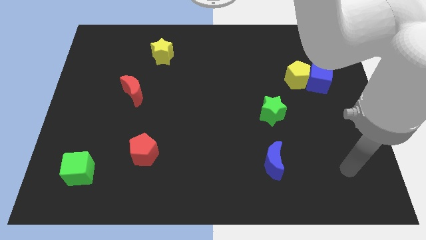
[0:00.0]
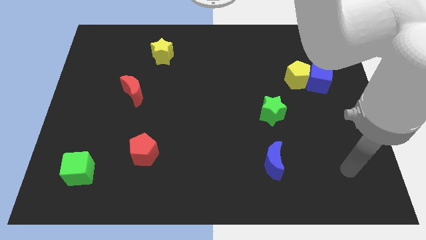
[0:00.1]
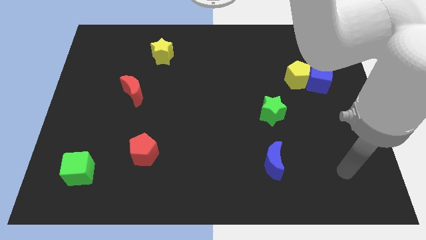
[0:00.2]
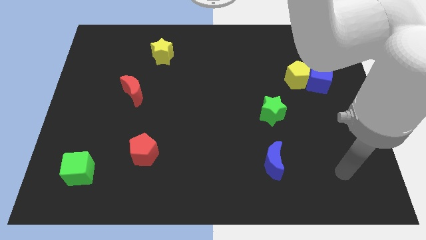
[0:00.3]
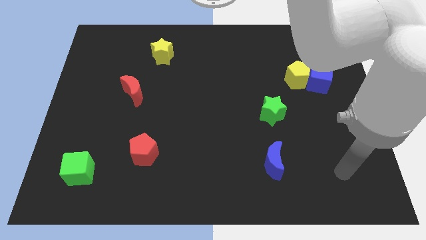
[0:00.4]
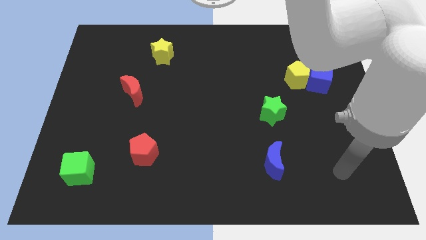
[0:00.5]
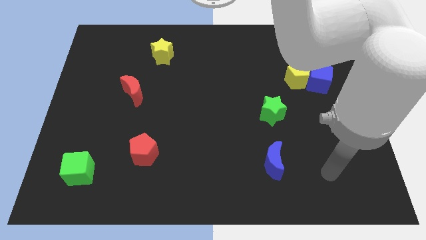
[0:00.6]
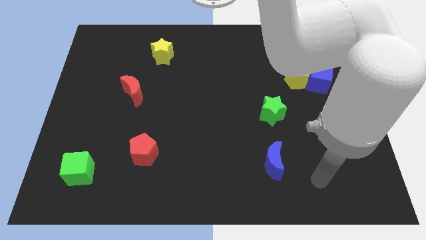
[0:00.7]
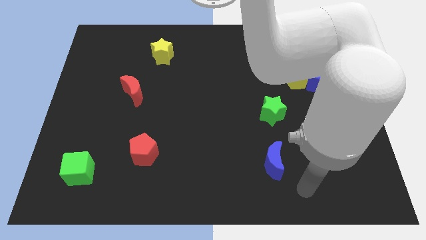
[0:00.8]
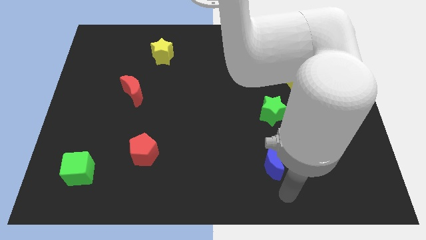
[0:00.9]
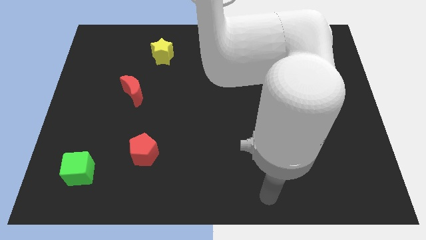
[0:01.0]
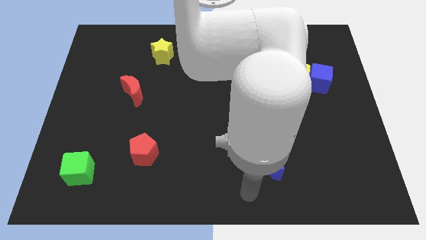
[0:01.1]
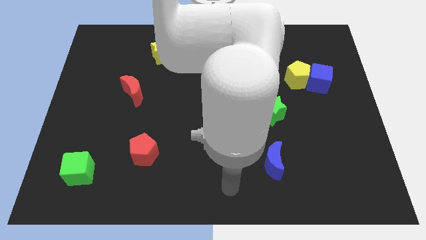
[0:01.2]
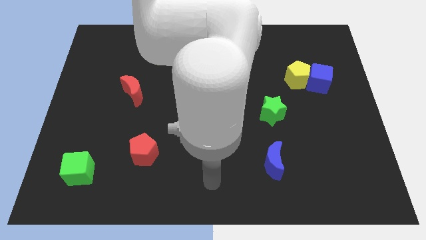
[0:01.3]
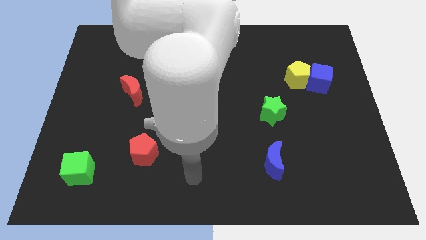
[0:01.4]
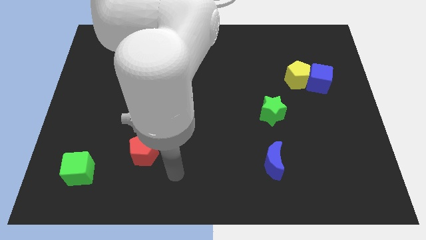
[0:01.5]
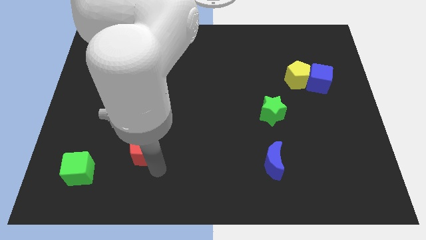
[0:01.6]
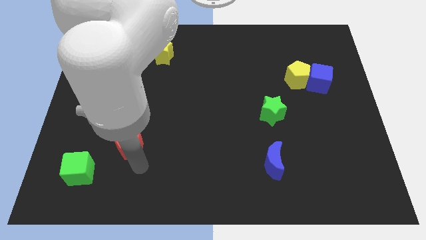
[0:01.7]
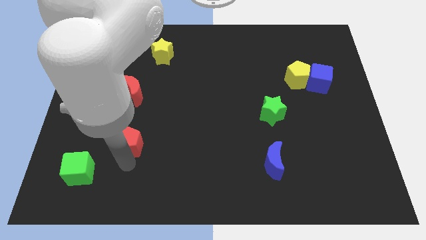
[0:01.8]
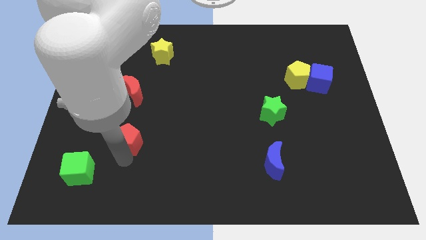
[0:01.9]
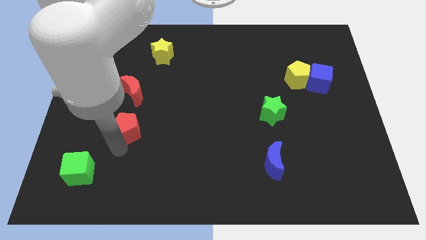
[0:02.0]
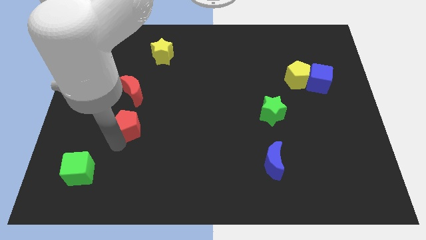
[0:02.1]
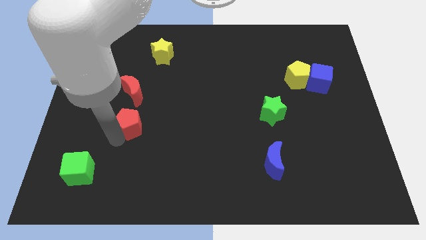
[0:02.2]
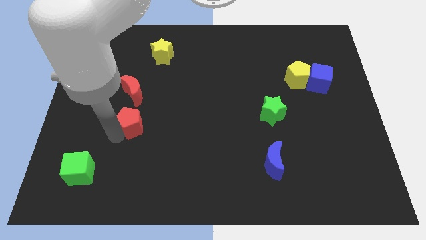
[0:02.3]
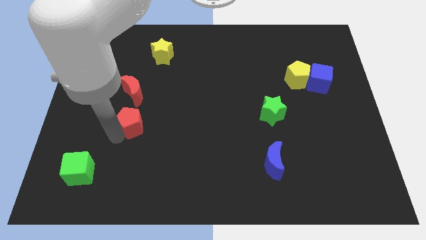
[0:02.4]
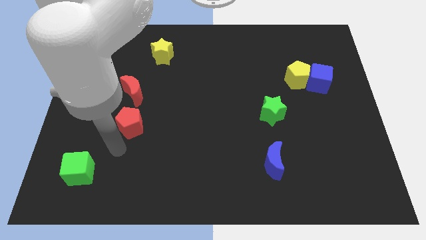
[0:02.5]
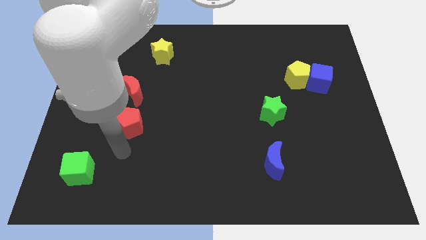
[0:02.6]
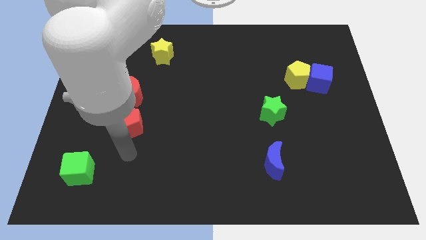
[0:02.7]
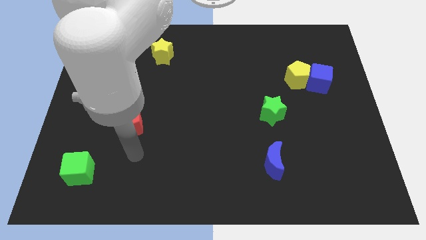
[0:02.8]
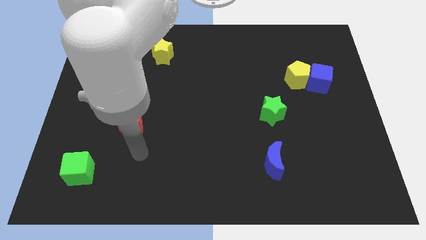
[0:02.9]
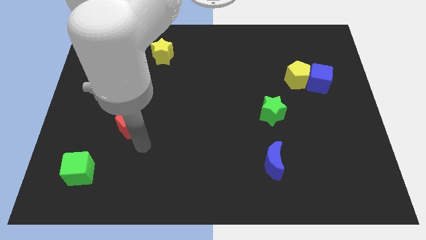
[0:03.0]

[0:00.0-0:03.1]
push red pentagon towards red moon

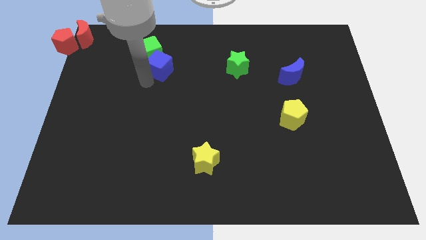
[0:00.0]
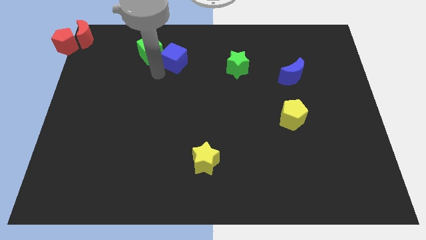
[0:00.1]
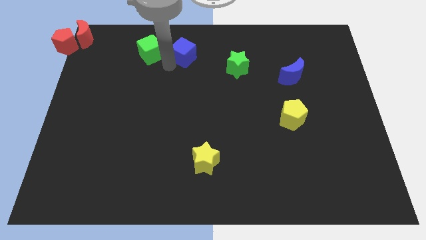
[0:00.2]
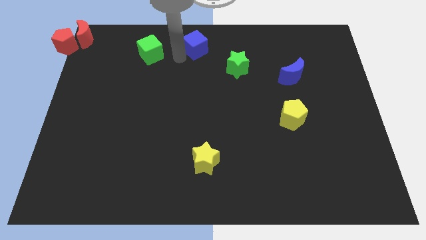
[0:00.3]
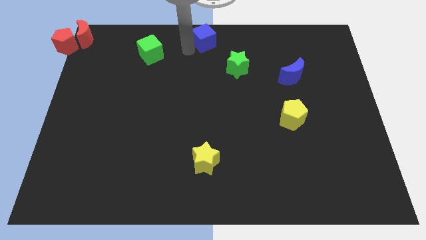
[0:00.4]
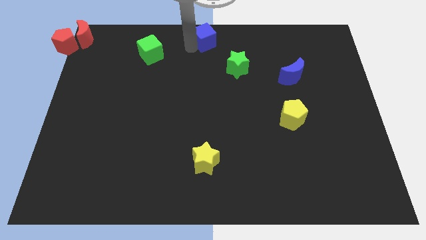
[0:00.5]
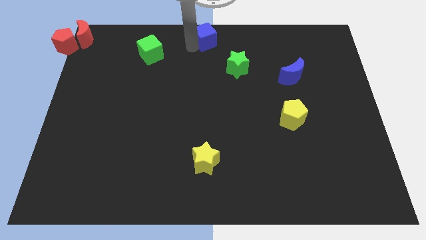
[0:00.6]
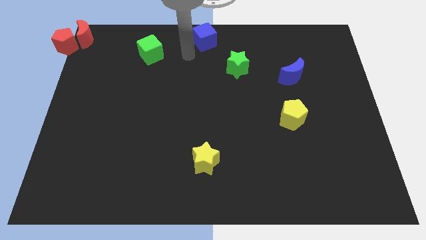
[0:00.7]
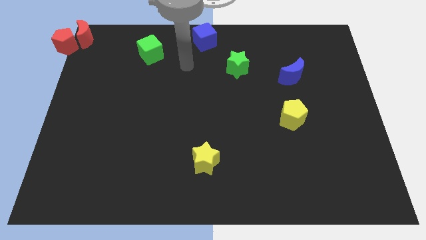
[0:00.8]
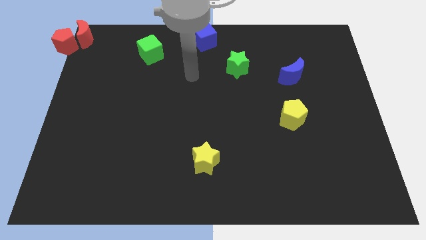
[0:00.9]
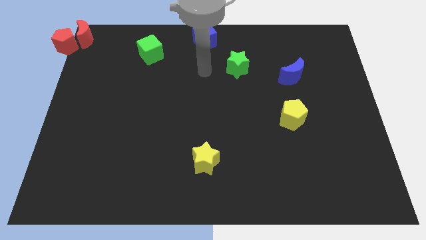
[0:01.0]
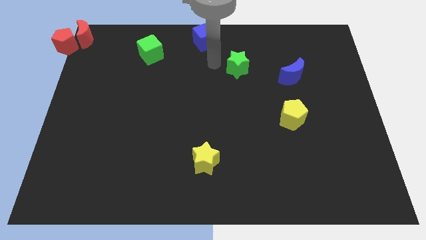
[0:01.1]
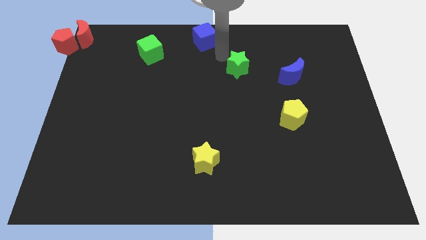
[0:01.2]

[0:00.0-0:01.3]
move blue cube to top center

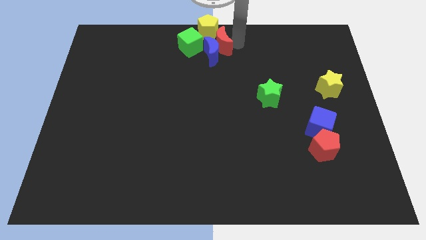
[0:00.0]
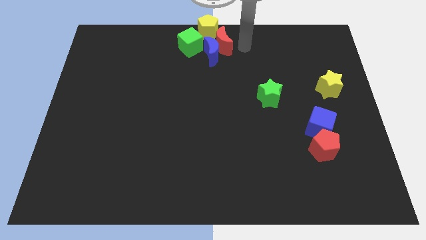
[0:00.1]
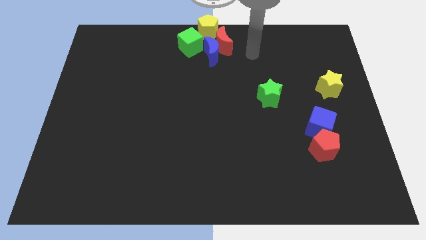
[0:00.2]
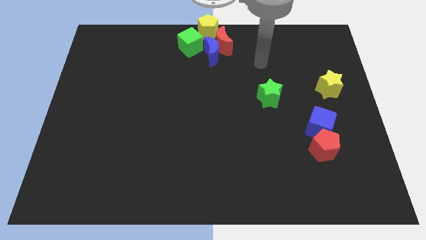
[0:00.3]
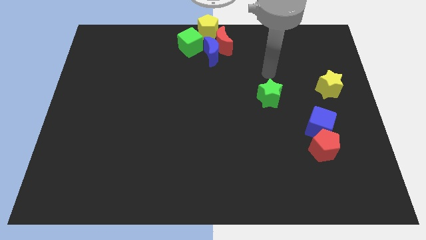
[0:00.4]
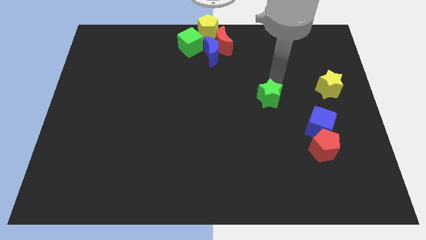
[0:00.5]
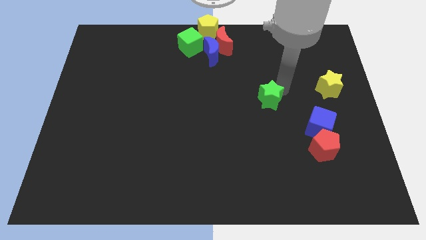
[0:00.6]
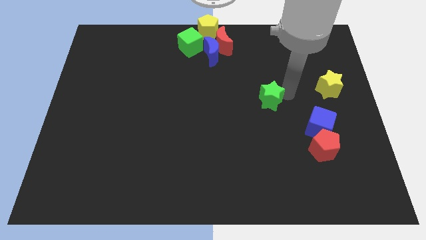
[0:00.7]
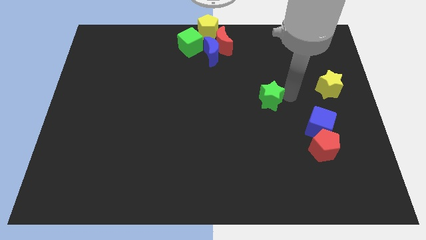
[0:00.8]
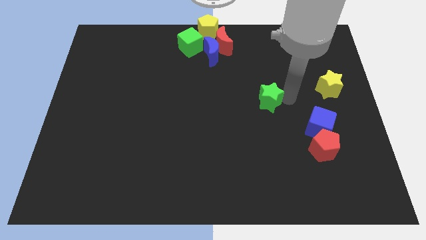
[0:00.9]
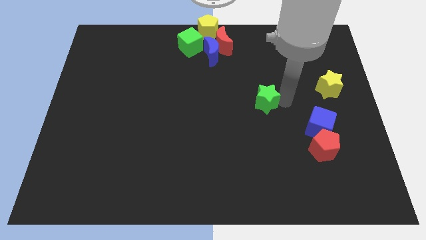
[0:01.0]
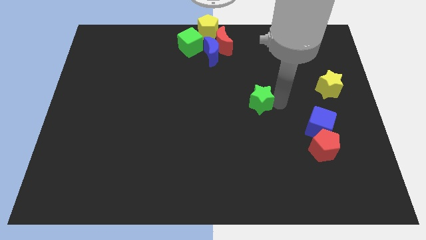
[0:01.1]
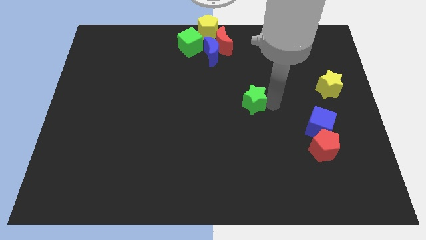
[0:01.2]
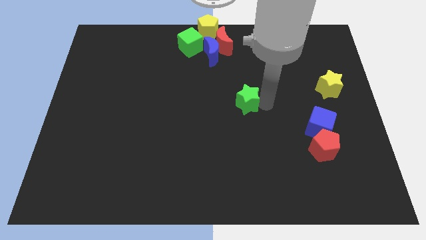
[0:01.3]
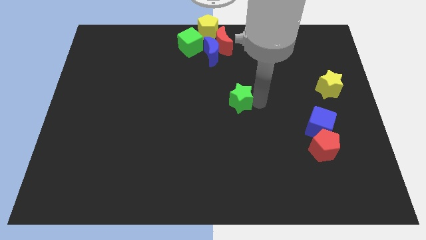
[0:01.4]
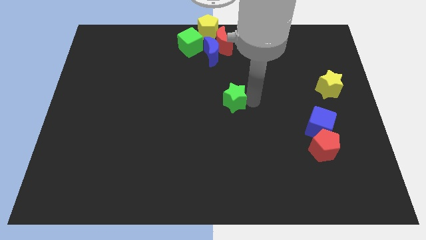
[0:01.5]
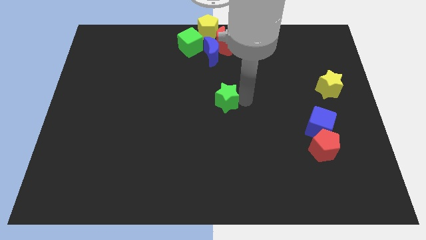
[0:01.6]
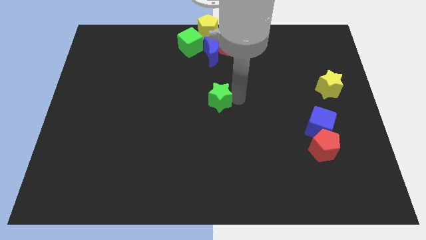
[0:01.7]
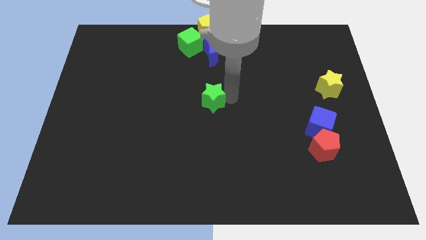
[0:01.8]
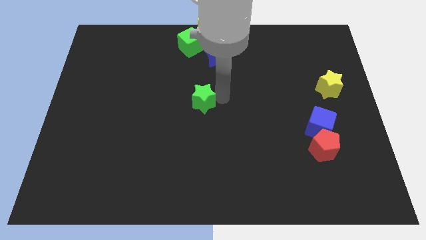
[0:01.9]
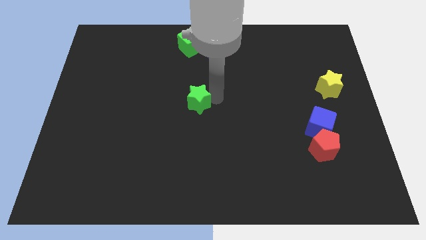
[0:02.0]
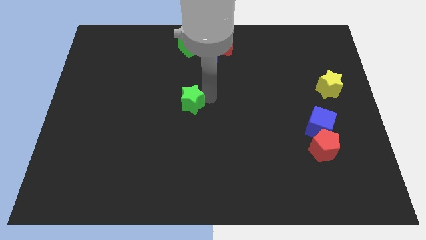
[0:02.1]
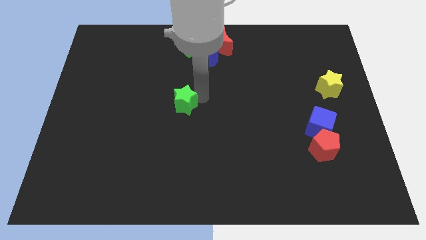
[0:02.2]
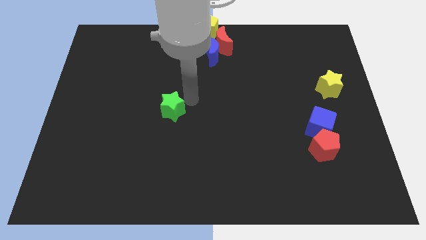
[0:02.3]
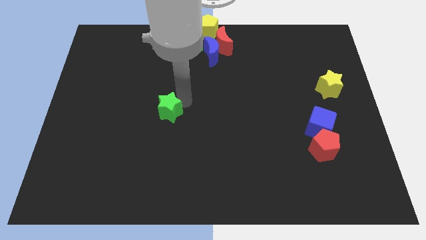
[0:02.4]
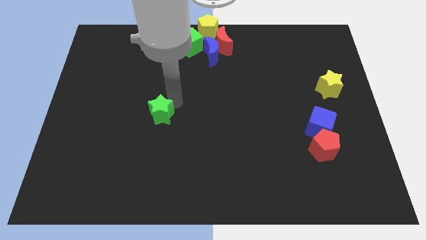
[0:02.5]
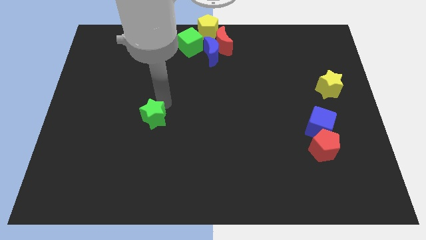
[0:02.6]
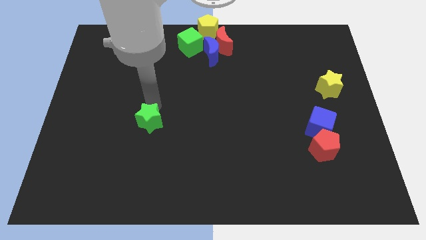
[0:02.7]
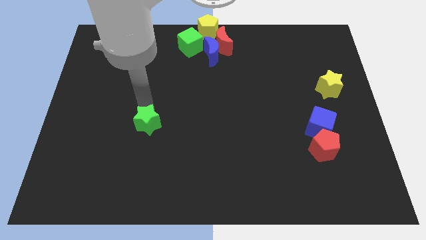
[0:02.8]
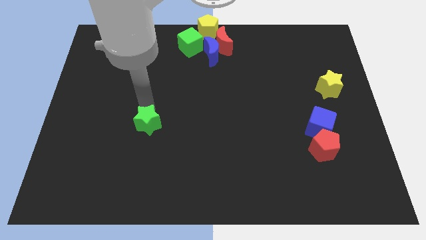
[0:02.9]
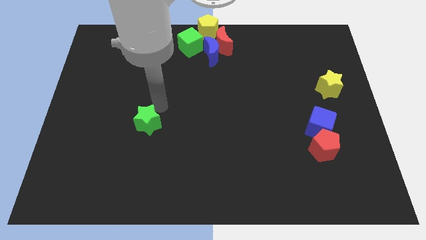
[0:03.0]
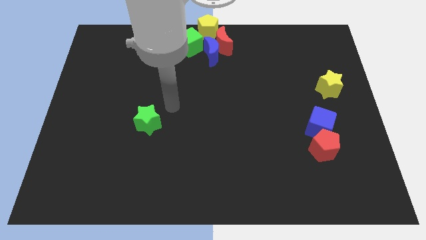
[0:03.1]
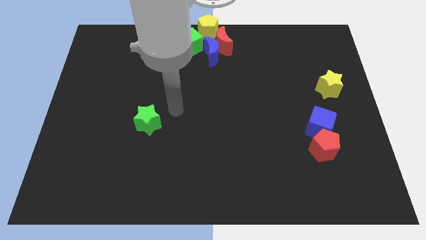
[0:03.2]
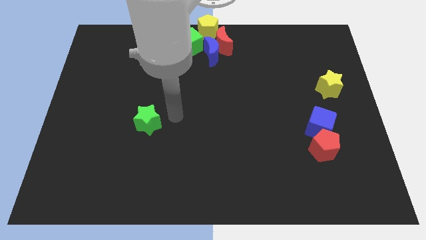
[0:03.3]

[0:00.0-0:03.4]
push the green star towards the bottom side of the board

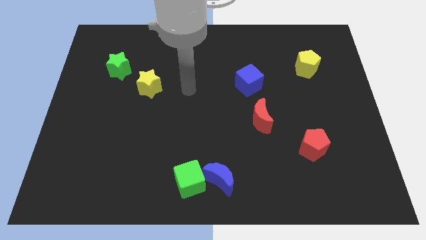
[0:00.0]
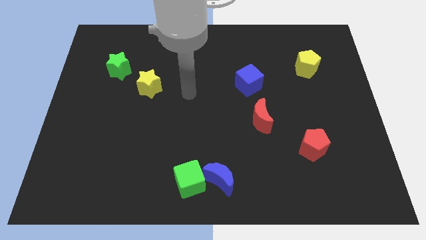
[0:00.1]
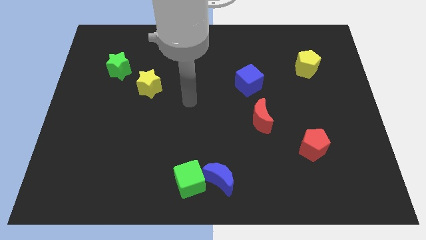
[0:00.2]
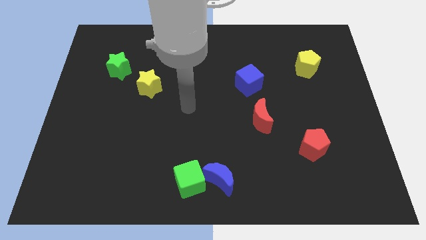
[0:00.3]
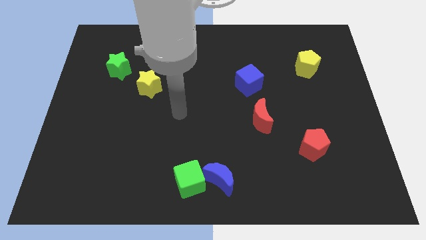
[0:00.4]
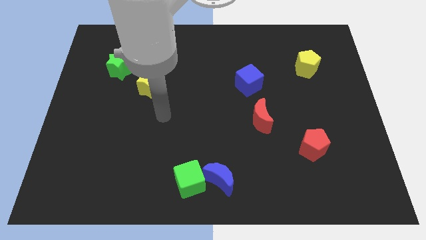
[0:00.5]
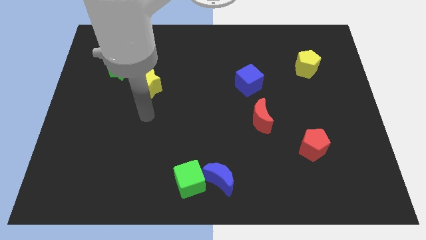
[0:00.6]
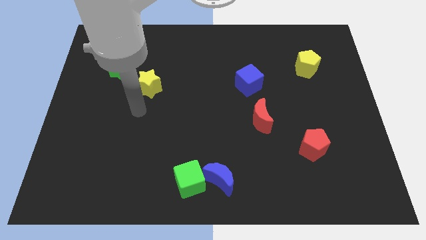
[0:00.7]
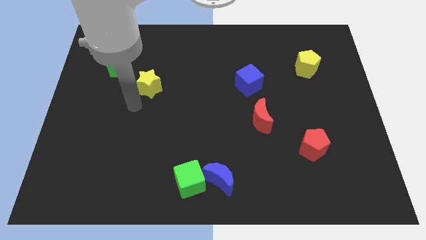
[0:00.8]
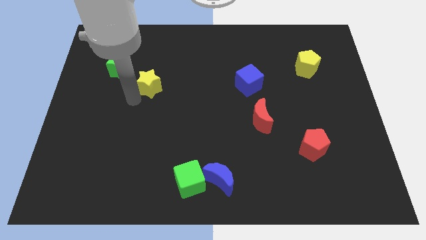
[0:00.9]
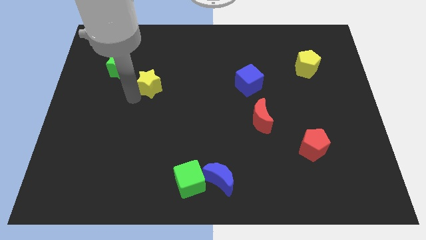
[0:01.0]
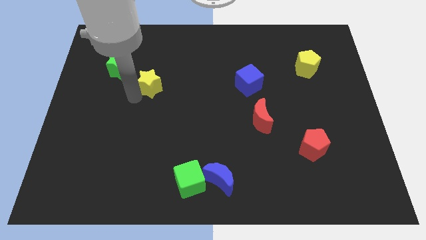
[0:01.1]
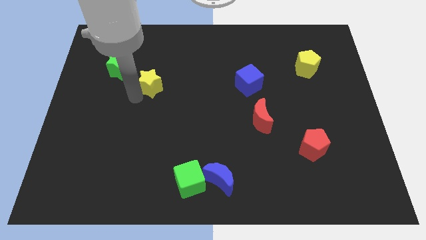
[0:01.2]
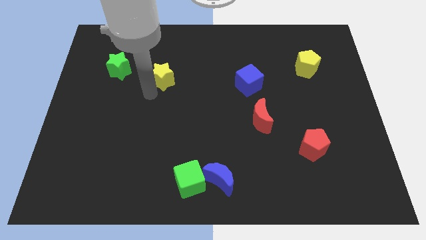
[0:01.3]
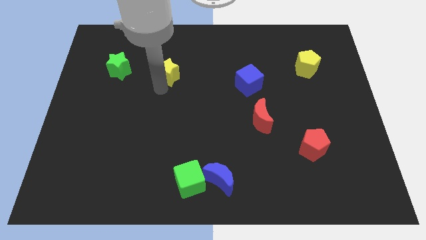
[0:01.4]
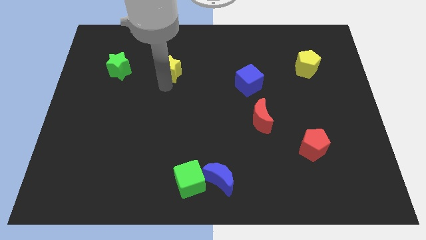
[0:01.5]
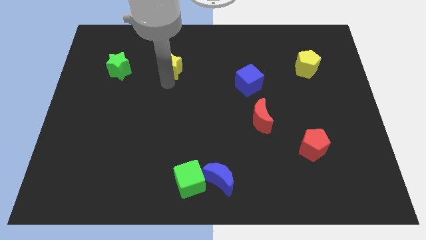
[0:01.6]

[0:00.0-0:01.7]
move the yellow star right to the green star
